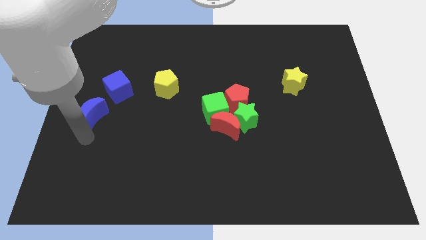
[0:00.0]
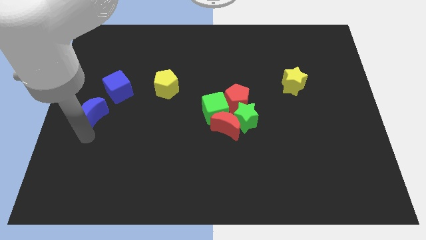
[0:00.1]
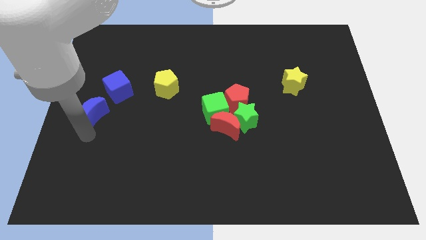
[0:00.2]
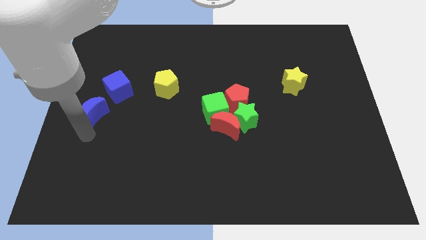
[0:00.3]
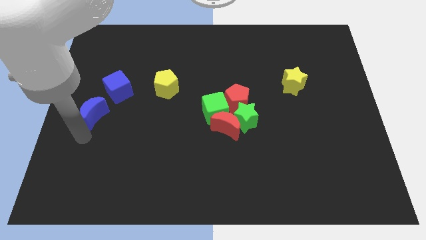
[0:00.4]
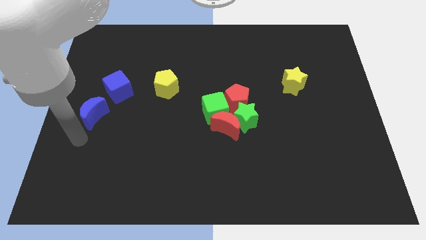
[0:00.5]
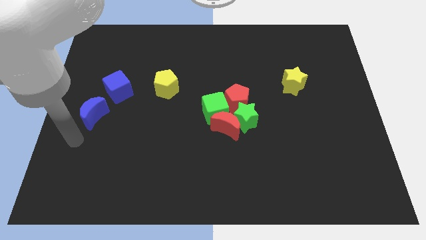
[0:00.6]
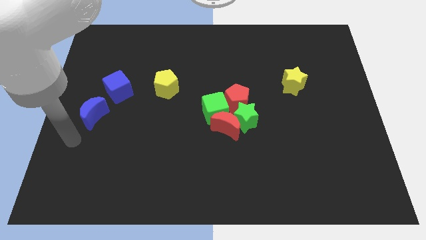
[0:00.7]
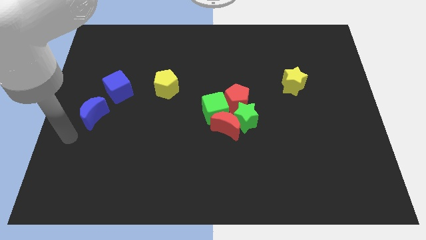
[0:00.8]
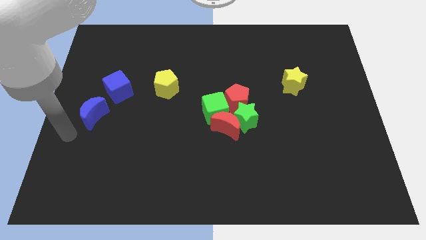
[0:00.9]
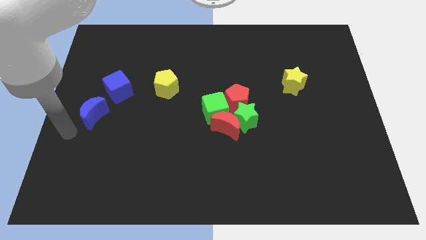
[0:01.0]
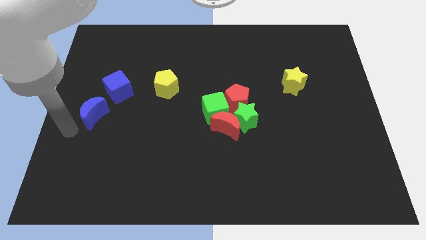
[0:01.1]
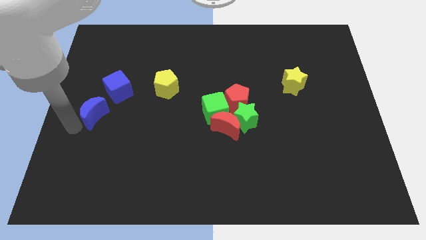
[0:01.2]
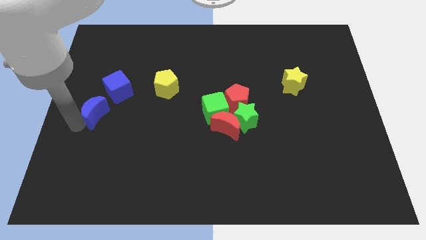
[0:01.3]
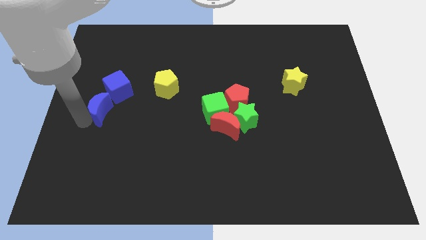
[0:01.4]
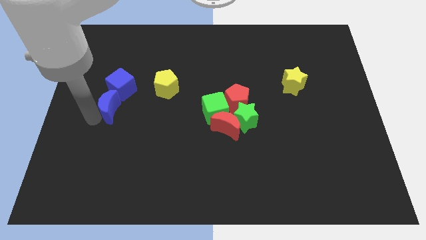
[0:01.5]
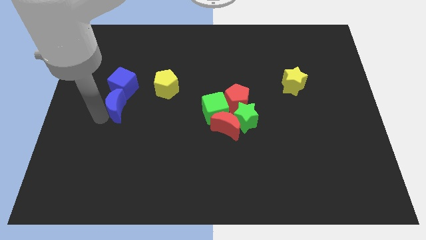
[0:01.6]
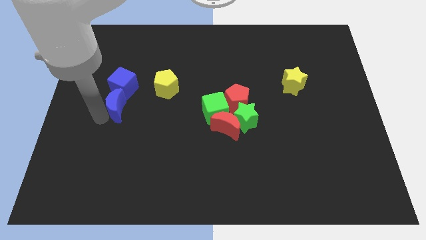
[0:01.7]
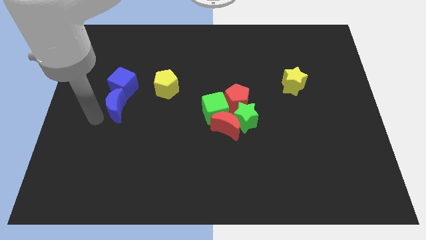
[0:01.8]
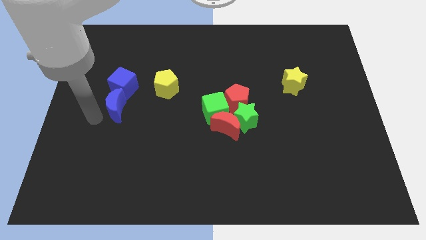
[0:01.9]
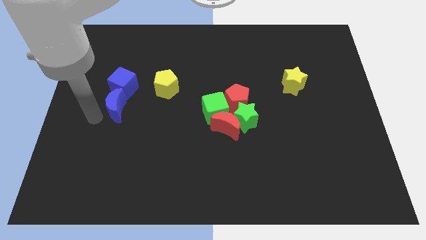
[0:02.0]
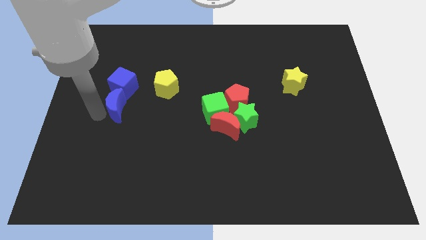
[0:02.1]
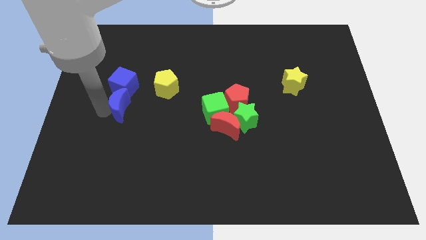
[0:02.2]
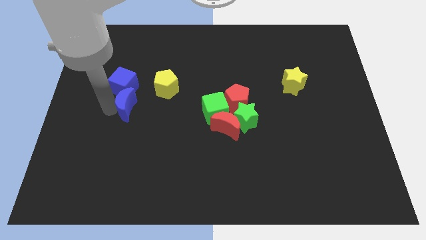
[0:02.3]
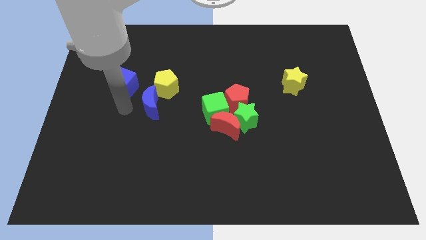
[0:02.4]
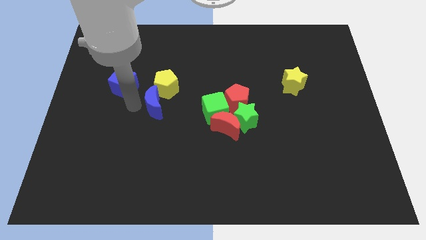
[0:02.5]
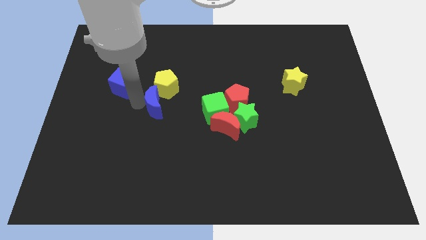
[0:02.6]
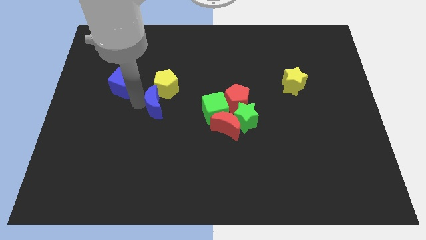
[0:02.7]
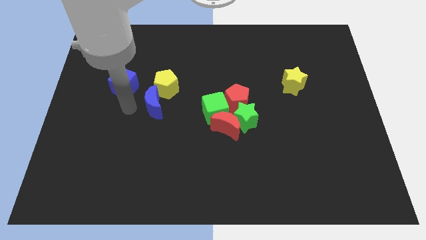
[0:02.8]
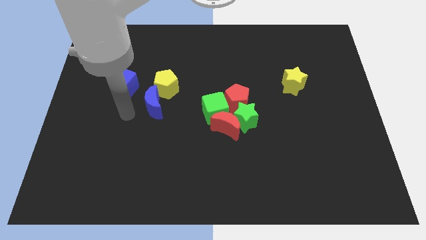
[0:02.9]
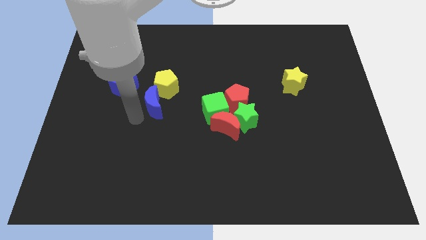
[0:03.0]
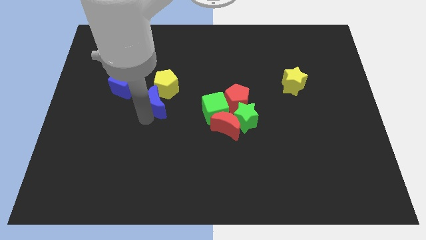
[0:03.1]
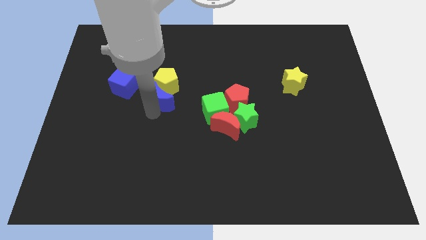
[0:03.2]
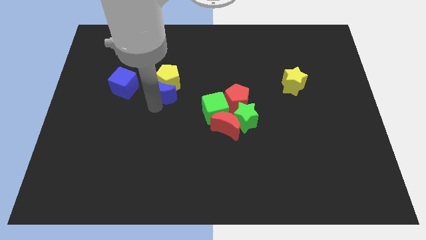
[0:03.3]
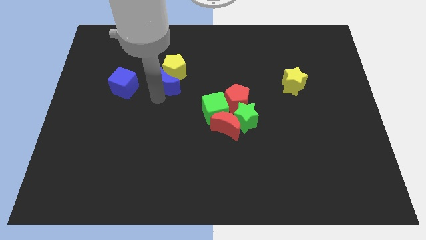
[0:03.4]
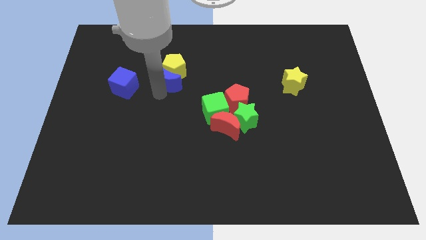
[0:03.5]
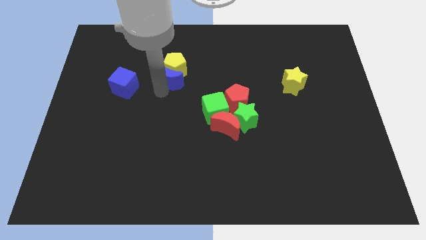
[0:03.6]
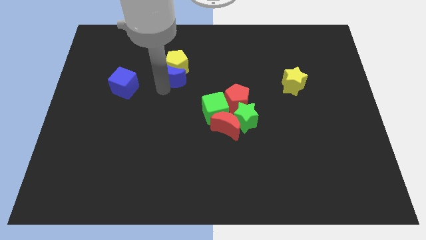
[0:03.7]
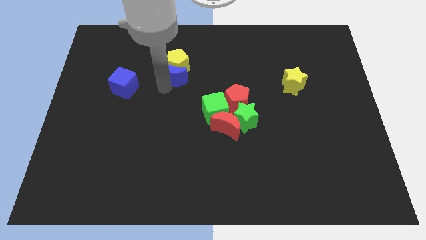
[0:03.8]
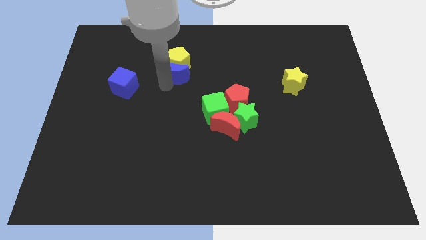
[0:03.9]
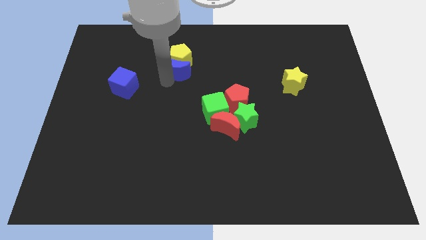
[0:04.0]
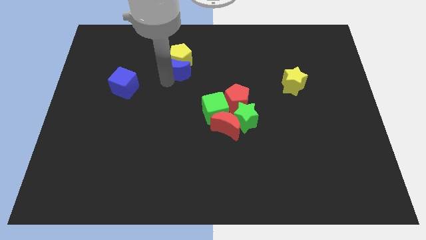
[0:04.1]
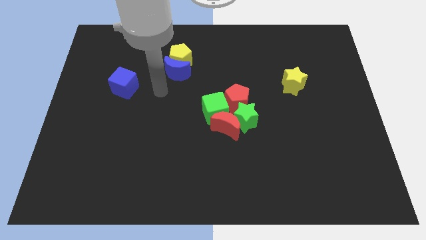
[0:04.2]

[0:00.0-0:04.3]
push blue crescent below yellow pentagon

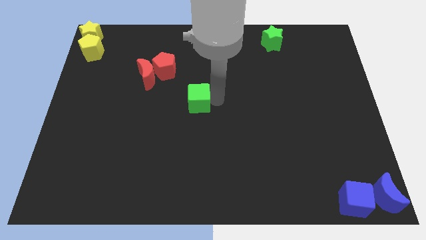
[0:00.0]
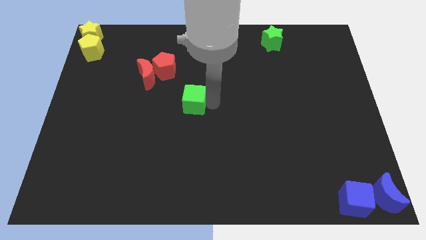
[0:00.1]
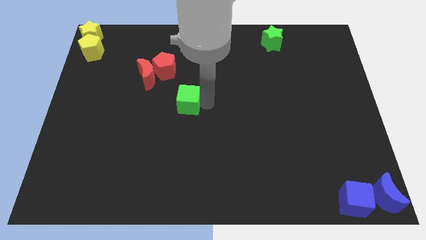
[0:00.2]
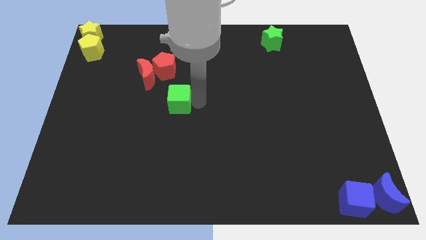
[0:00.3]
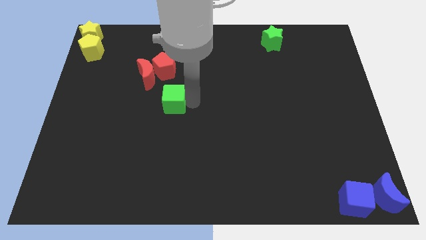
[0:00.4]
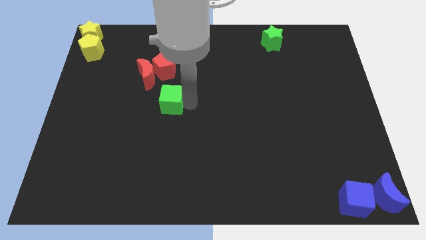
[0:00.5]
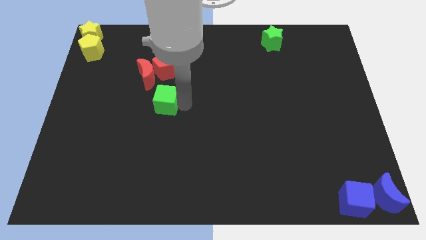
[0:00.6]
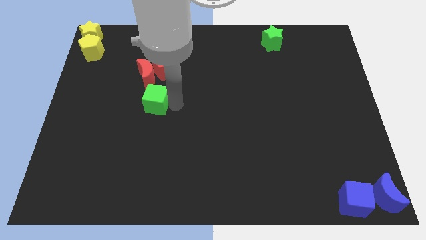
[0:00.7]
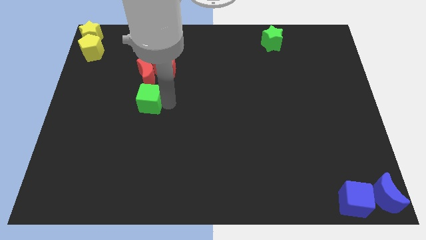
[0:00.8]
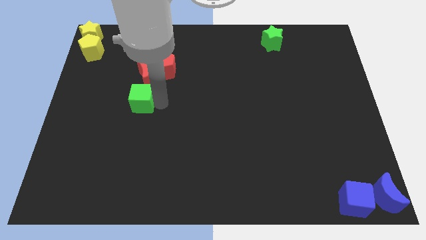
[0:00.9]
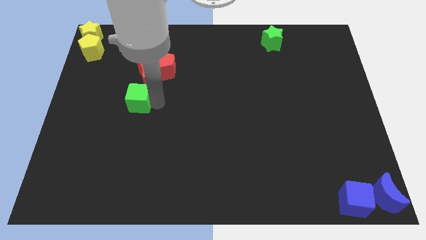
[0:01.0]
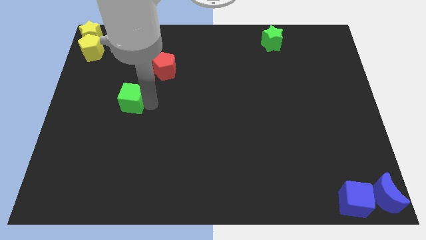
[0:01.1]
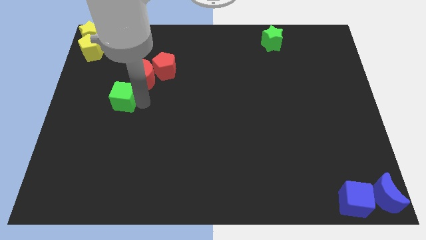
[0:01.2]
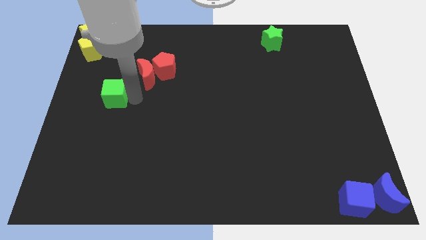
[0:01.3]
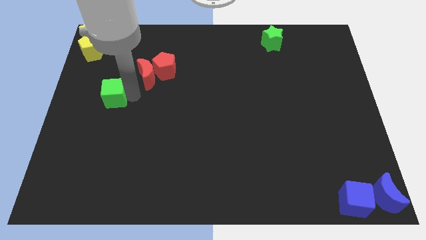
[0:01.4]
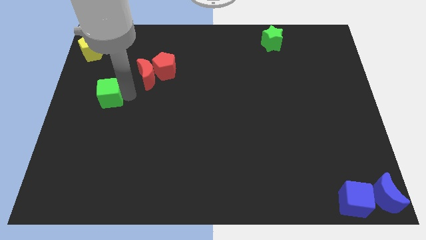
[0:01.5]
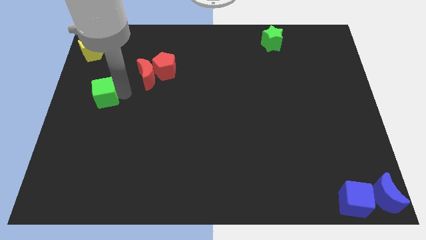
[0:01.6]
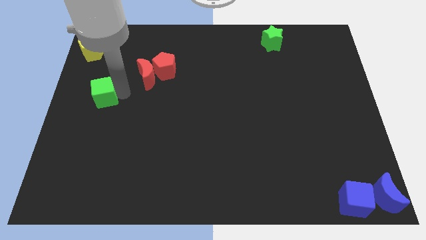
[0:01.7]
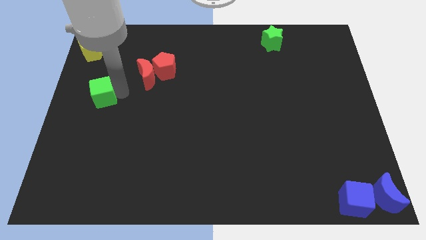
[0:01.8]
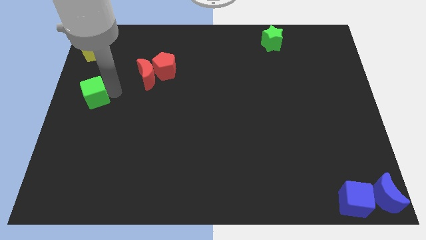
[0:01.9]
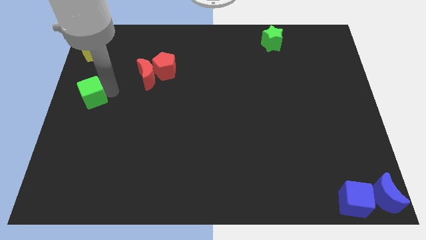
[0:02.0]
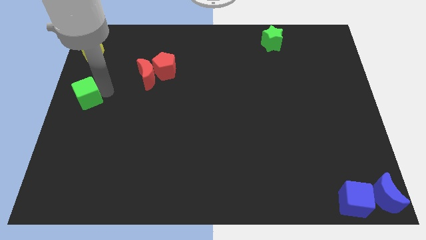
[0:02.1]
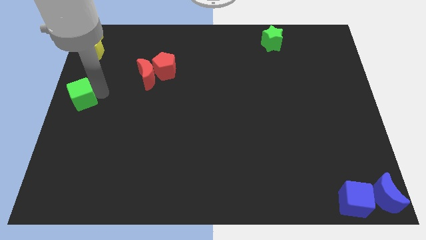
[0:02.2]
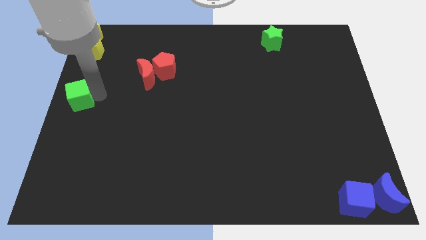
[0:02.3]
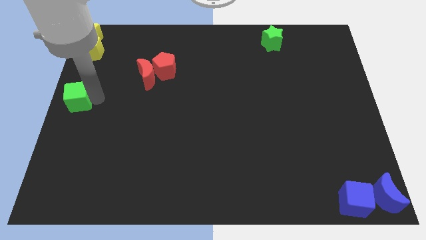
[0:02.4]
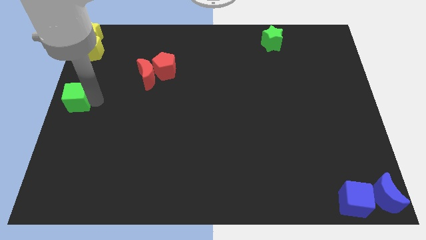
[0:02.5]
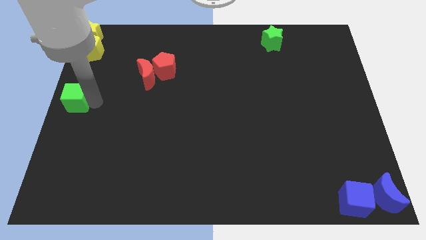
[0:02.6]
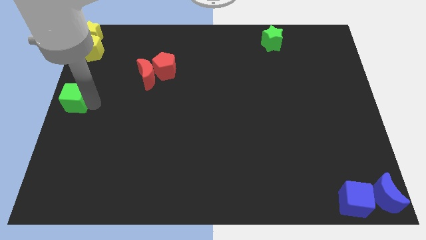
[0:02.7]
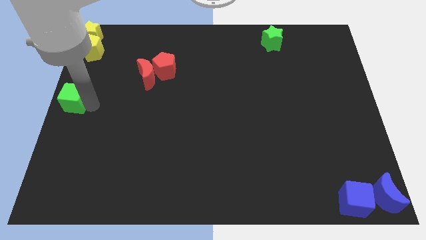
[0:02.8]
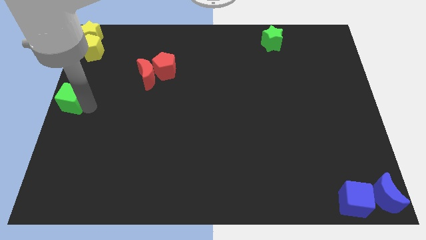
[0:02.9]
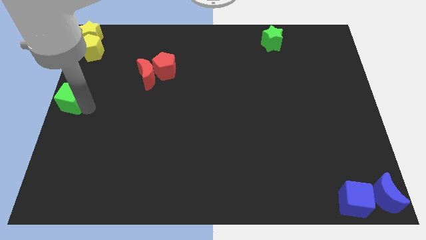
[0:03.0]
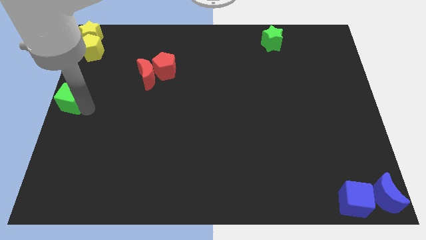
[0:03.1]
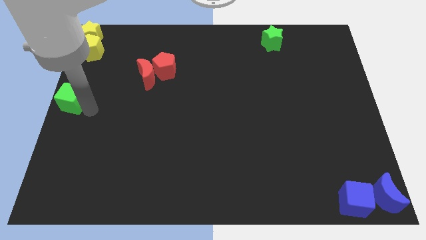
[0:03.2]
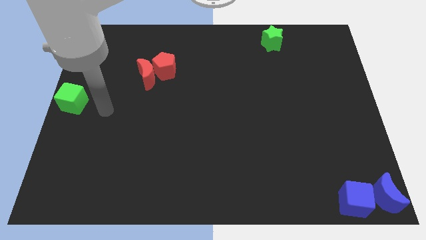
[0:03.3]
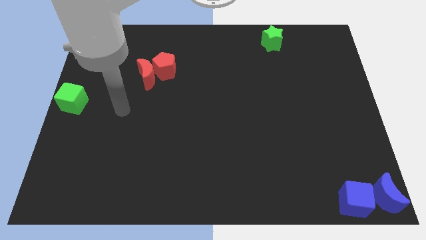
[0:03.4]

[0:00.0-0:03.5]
move the green star to the left center of the board

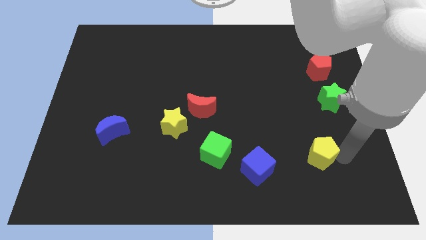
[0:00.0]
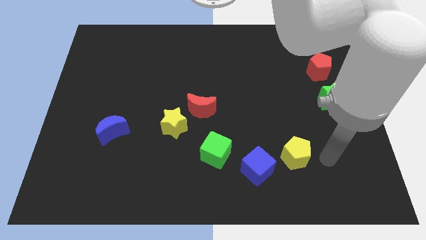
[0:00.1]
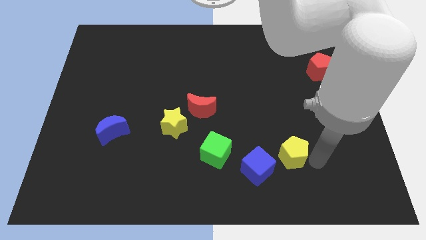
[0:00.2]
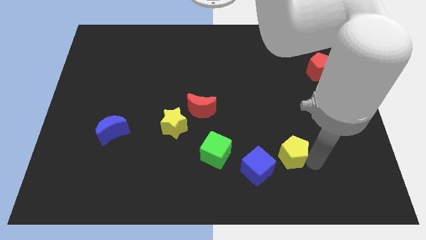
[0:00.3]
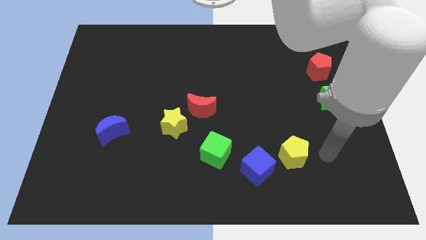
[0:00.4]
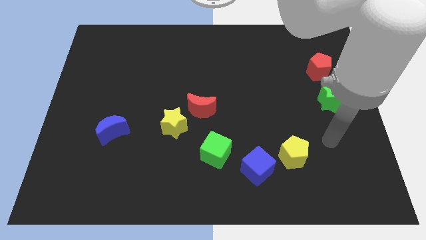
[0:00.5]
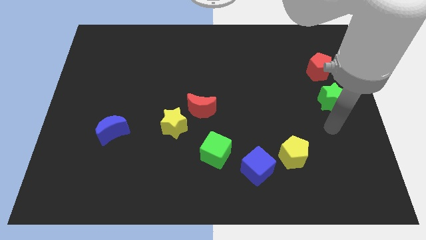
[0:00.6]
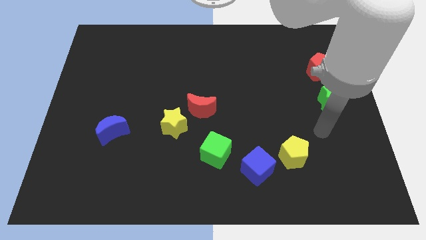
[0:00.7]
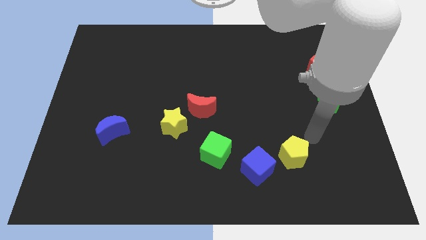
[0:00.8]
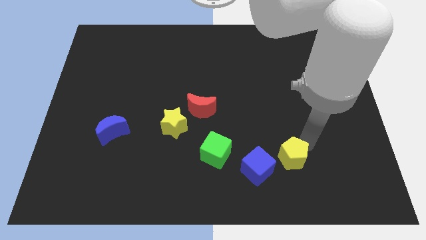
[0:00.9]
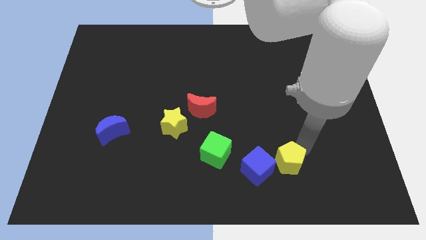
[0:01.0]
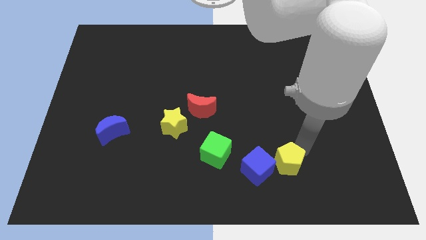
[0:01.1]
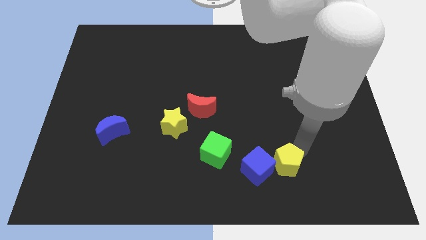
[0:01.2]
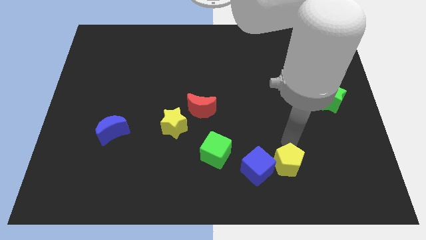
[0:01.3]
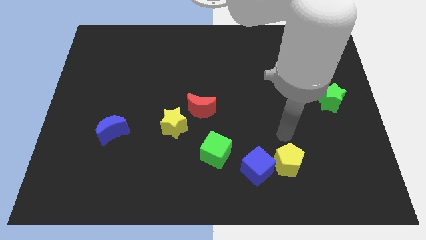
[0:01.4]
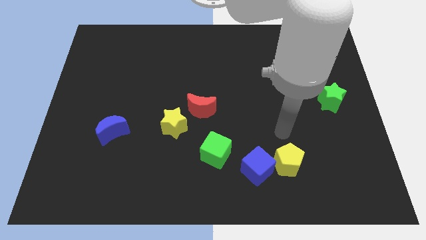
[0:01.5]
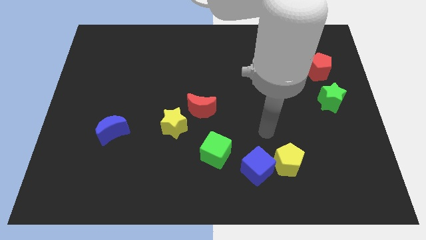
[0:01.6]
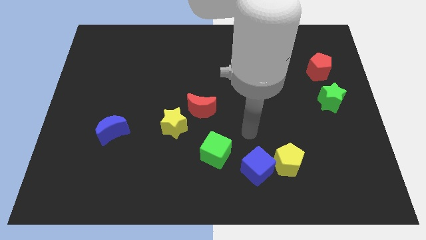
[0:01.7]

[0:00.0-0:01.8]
move the yellow pentagon close to the blue cube
